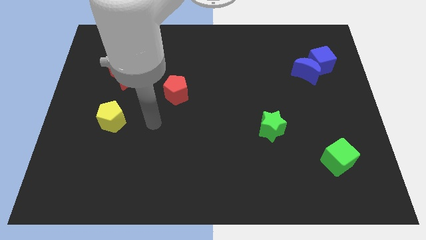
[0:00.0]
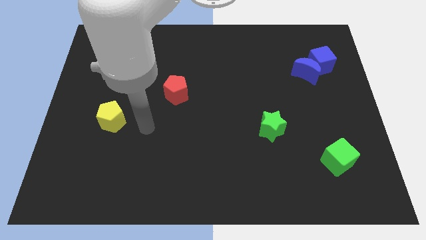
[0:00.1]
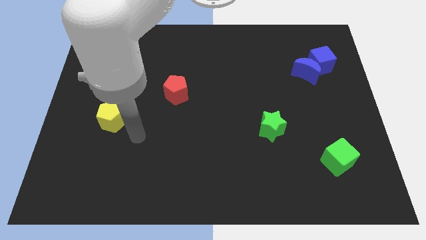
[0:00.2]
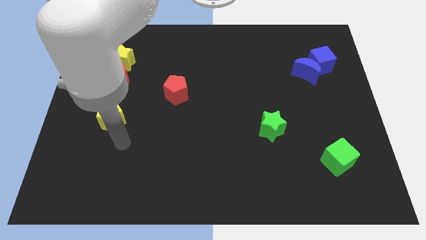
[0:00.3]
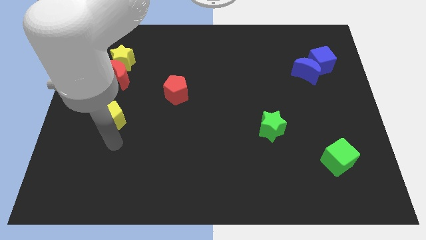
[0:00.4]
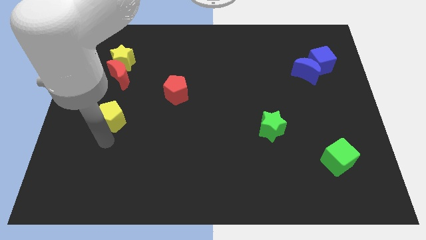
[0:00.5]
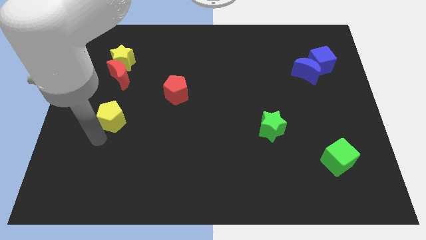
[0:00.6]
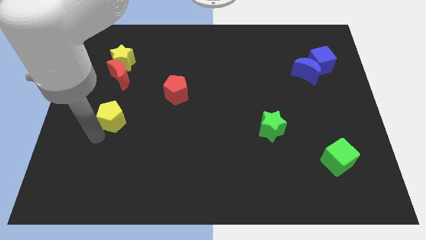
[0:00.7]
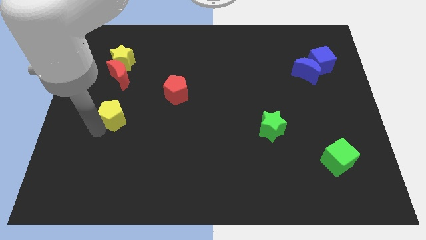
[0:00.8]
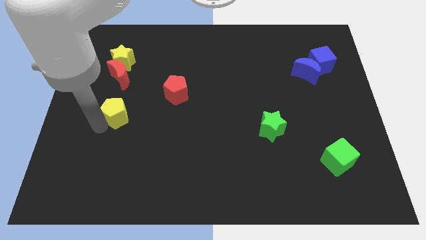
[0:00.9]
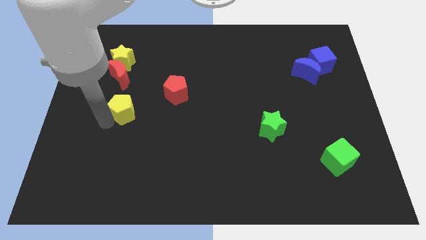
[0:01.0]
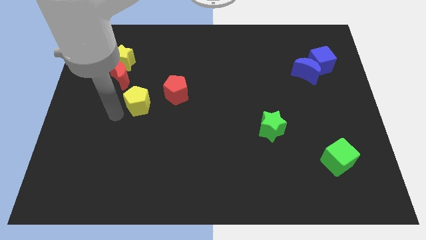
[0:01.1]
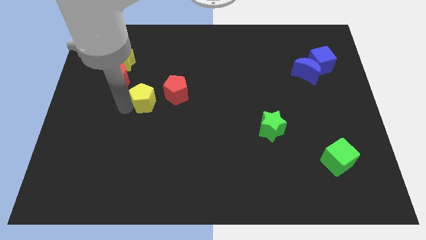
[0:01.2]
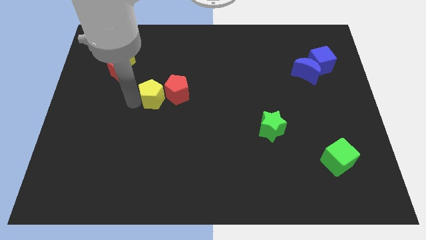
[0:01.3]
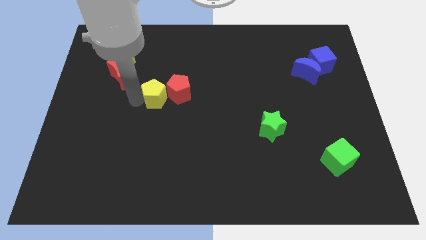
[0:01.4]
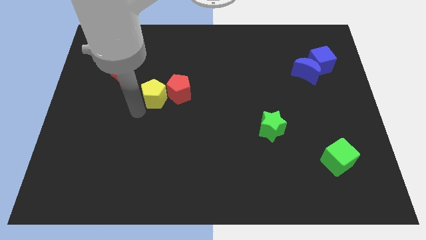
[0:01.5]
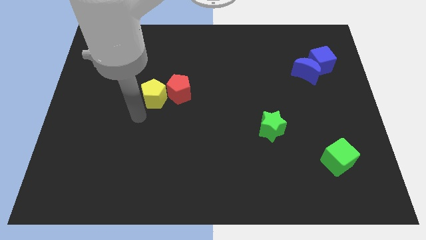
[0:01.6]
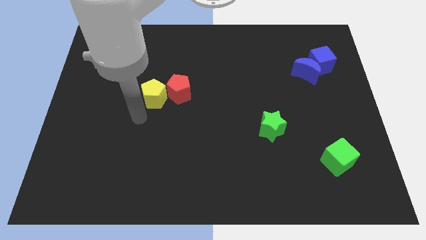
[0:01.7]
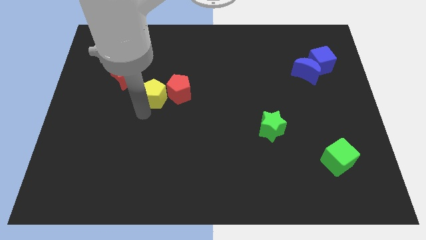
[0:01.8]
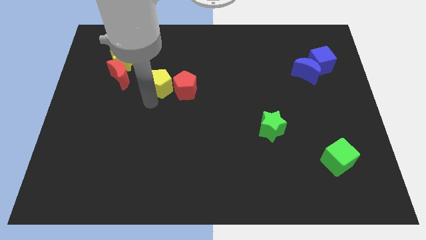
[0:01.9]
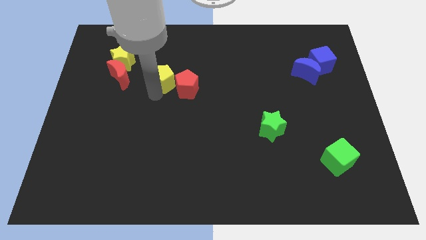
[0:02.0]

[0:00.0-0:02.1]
add yellow pentagon into red pentagon

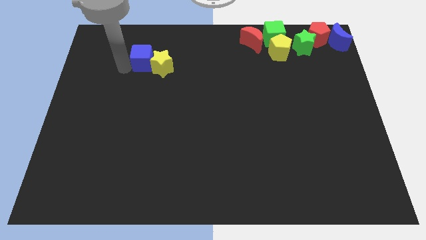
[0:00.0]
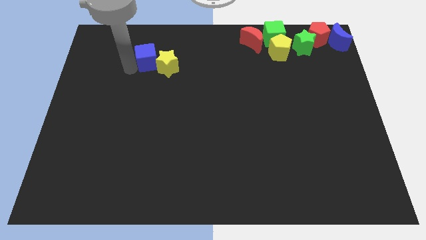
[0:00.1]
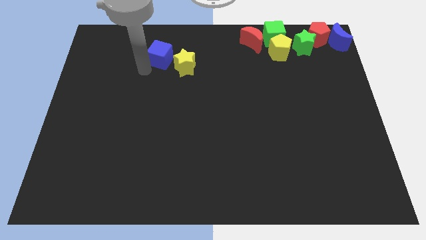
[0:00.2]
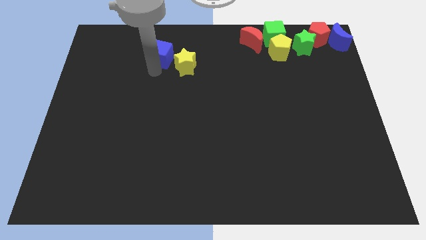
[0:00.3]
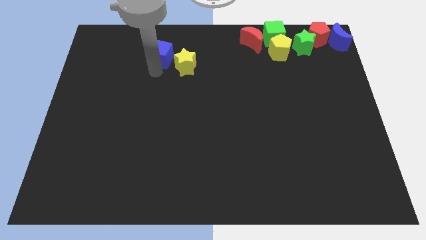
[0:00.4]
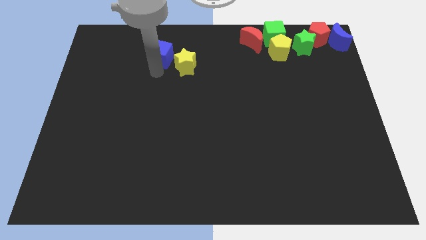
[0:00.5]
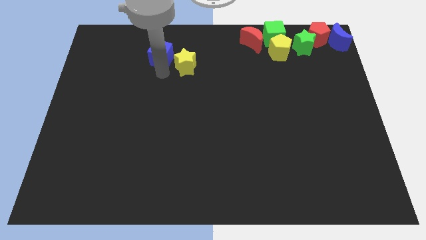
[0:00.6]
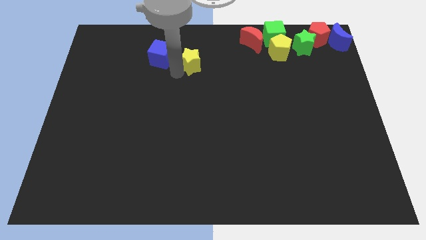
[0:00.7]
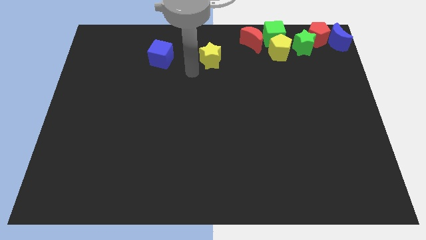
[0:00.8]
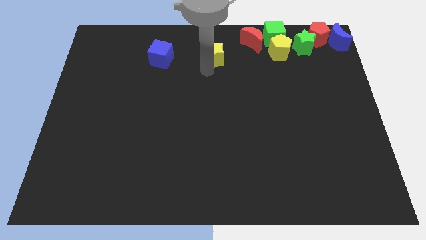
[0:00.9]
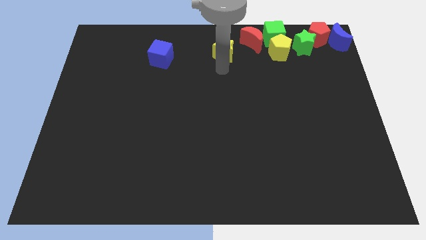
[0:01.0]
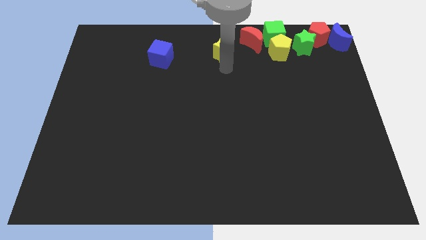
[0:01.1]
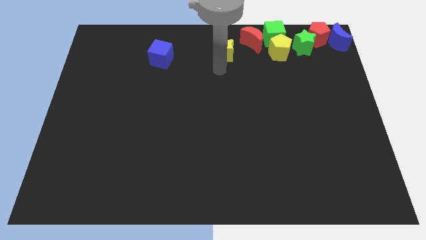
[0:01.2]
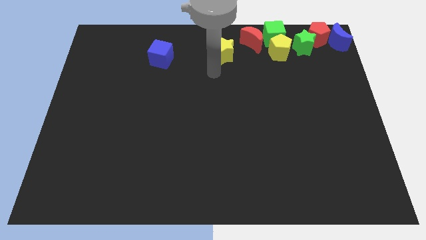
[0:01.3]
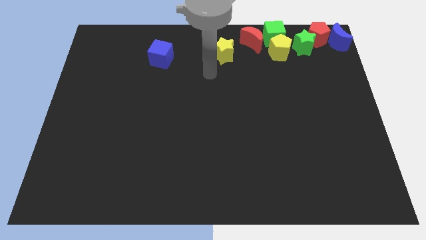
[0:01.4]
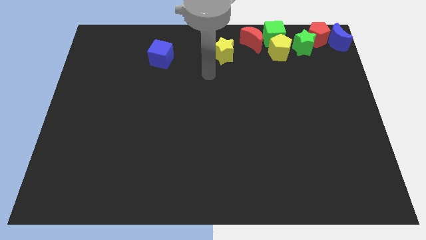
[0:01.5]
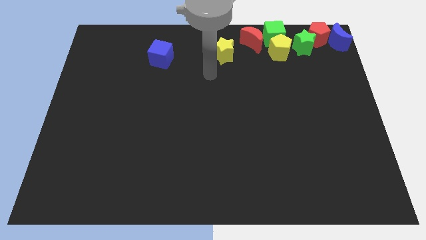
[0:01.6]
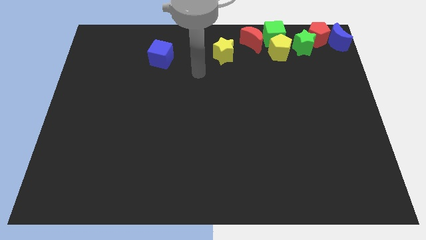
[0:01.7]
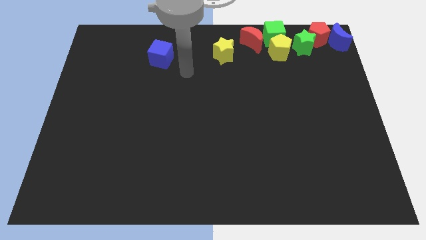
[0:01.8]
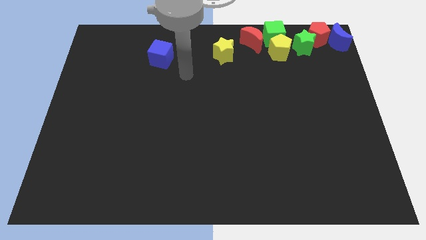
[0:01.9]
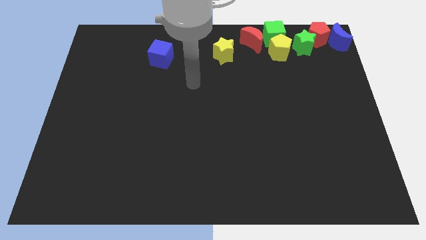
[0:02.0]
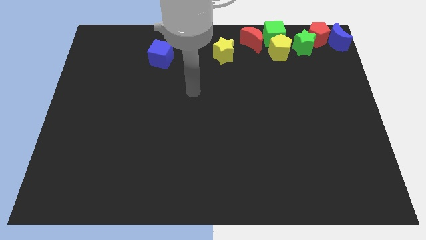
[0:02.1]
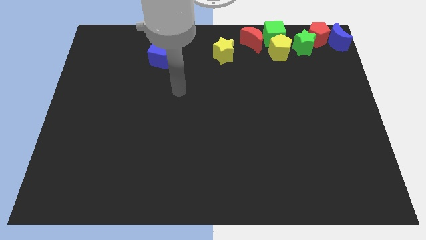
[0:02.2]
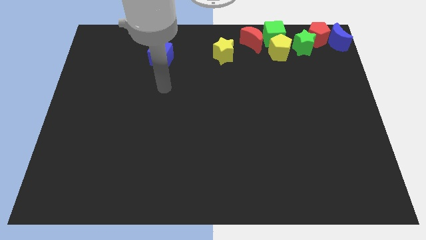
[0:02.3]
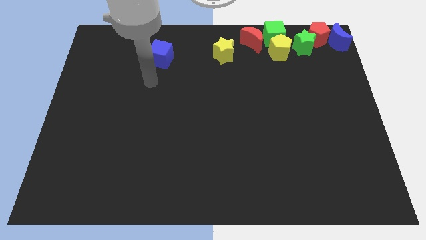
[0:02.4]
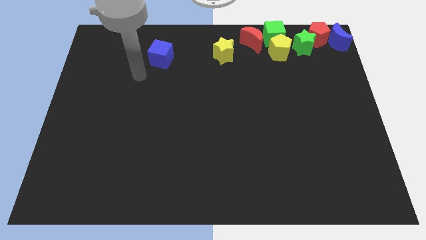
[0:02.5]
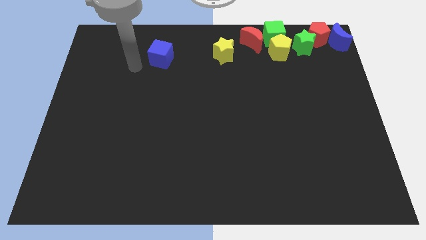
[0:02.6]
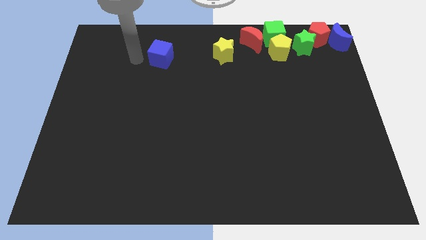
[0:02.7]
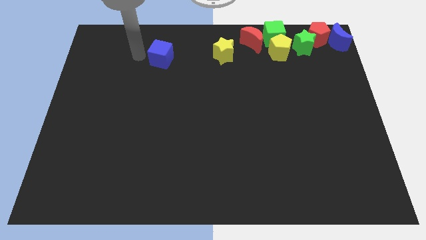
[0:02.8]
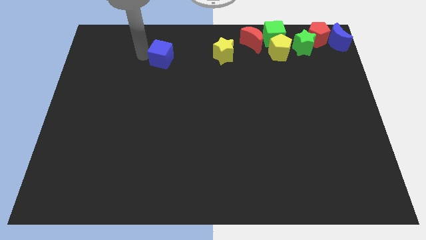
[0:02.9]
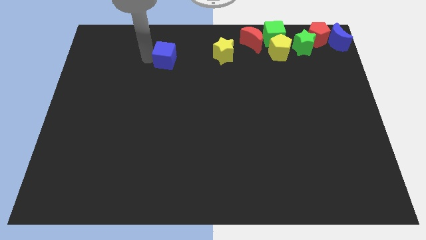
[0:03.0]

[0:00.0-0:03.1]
separate the yellow star from the blue cube

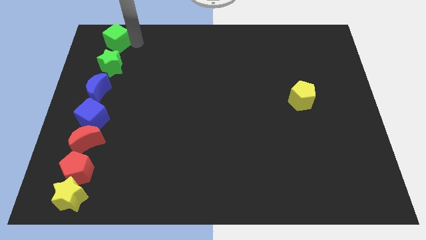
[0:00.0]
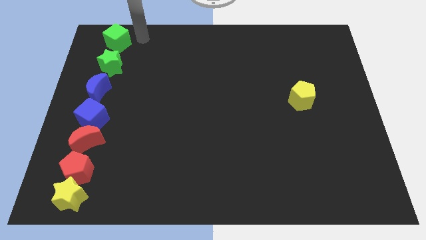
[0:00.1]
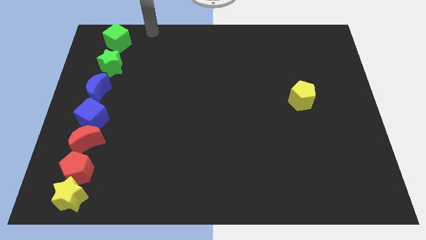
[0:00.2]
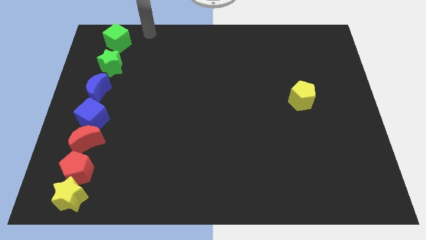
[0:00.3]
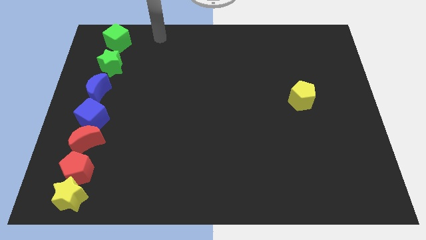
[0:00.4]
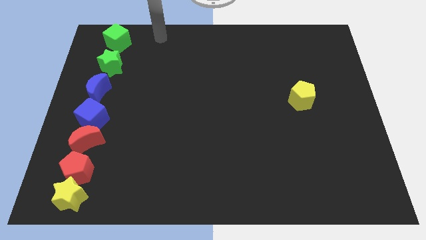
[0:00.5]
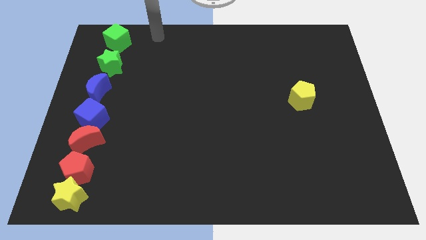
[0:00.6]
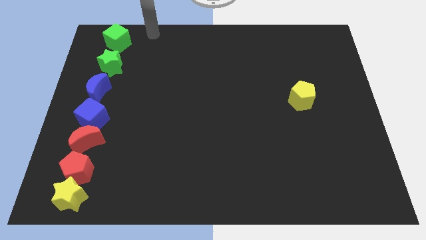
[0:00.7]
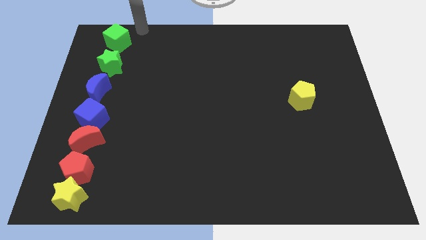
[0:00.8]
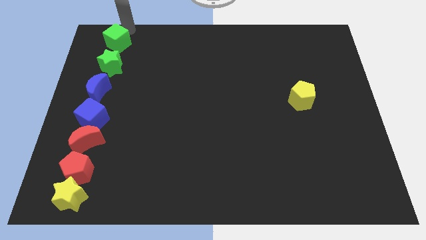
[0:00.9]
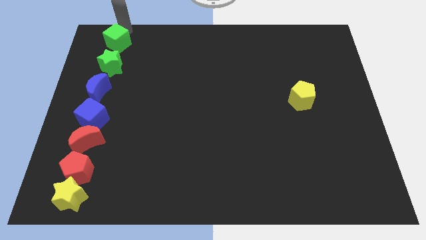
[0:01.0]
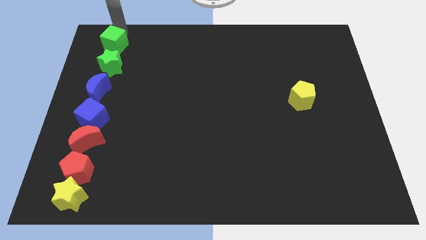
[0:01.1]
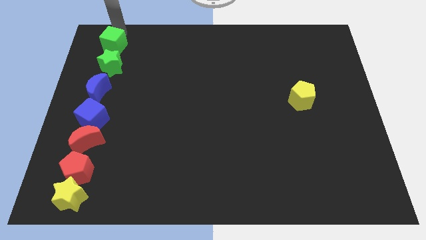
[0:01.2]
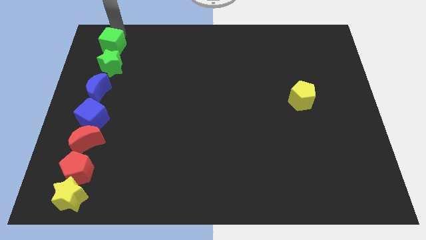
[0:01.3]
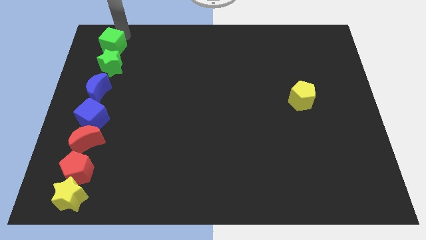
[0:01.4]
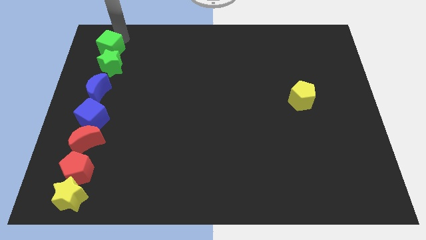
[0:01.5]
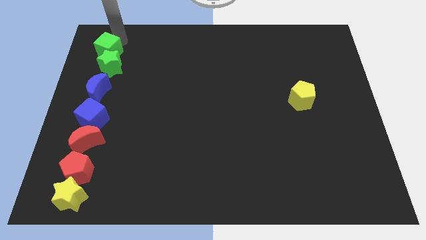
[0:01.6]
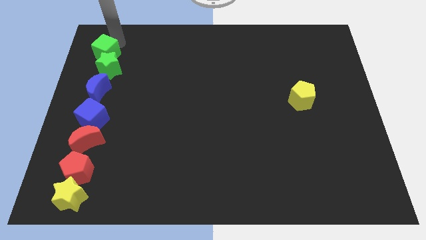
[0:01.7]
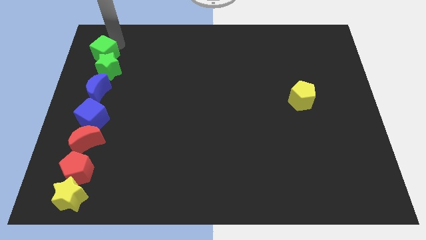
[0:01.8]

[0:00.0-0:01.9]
move the green cube into the top side of the green star

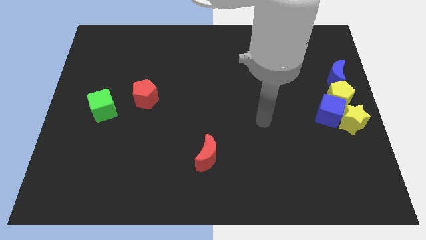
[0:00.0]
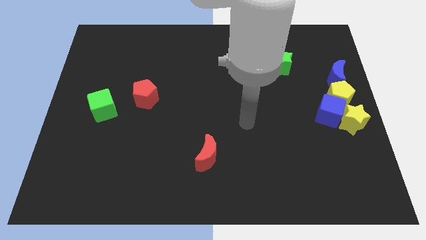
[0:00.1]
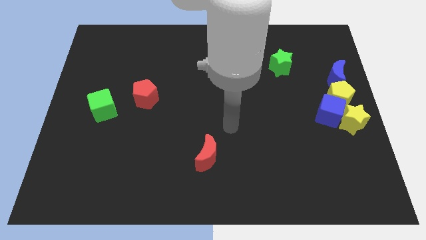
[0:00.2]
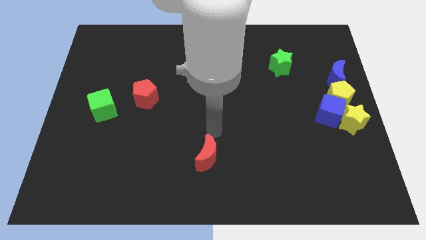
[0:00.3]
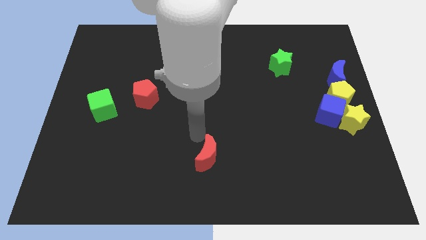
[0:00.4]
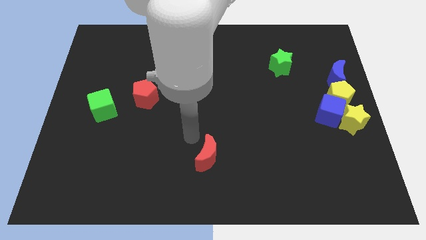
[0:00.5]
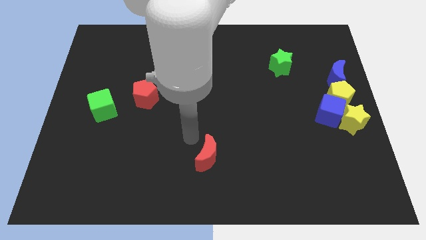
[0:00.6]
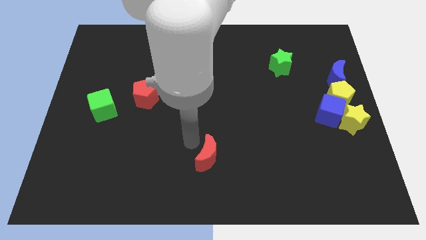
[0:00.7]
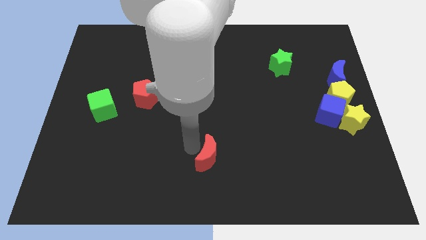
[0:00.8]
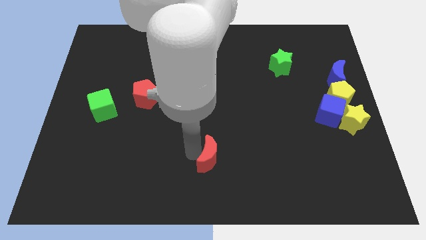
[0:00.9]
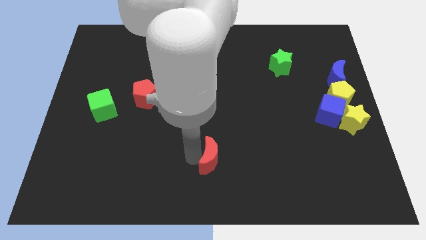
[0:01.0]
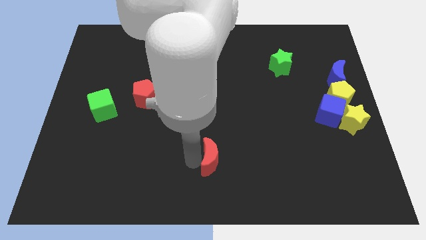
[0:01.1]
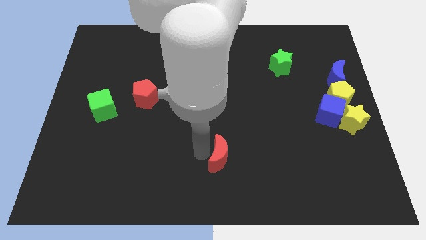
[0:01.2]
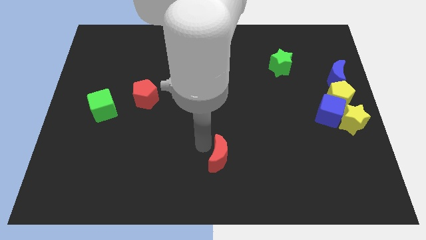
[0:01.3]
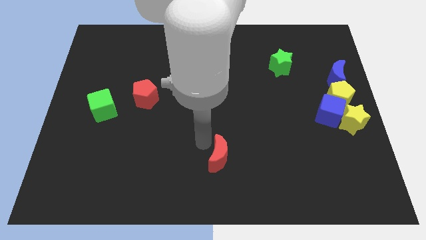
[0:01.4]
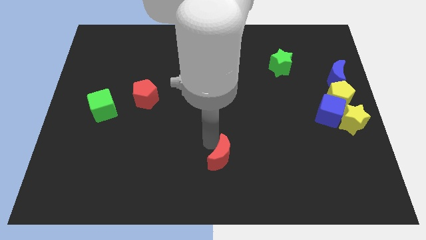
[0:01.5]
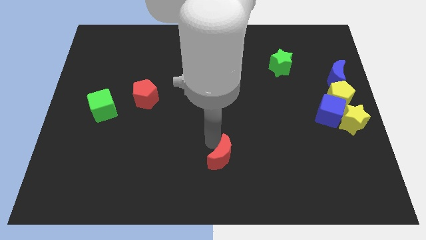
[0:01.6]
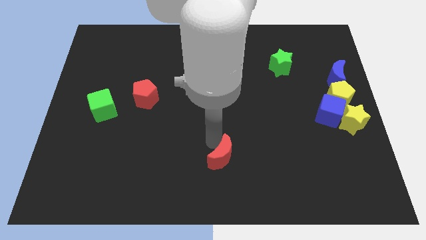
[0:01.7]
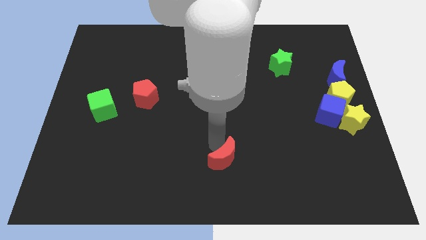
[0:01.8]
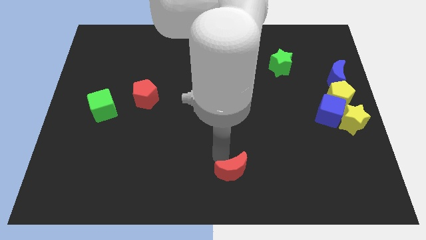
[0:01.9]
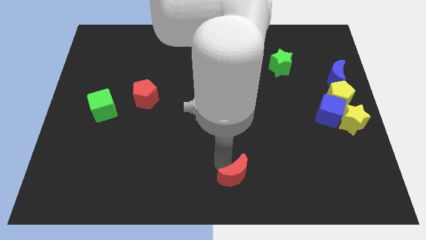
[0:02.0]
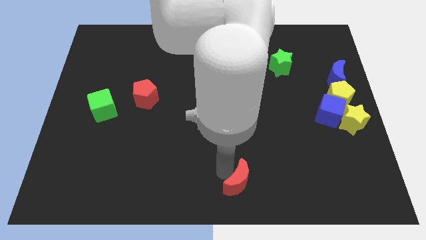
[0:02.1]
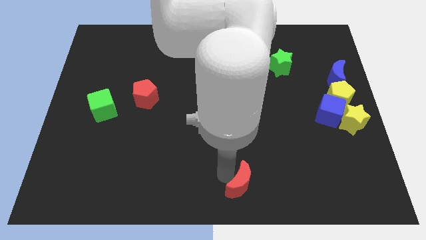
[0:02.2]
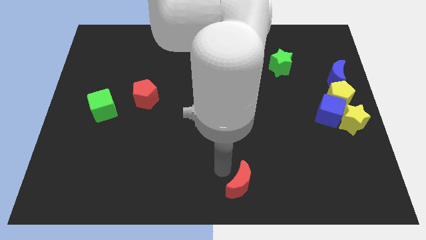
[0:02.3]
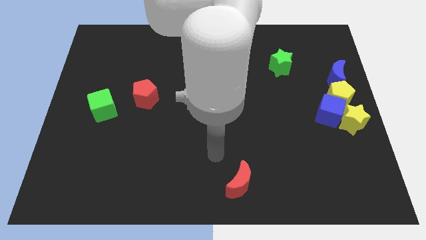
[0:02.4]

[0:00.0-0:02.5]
move the red crescent to the bottom center of the board
